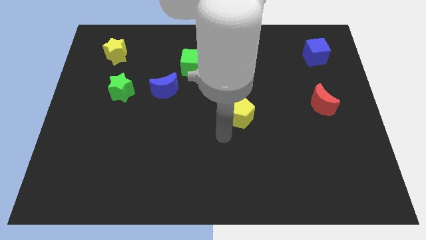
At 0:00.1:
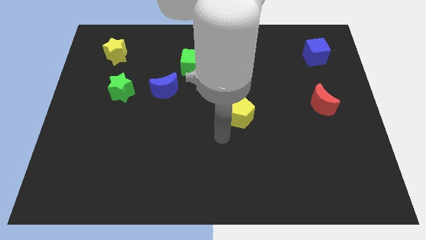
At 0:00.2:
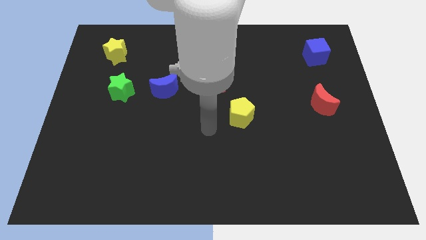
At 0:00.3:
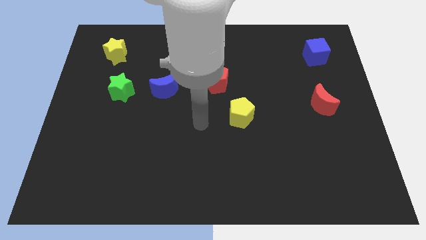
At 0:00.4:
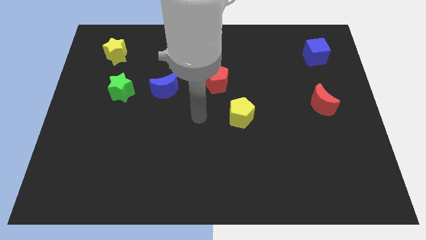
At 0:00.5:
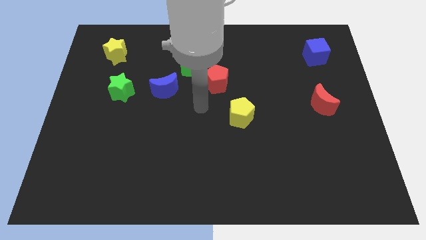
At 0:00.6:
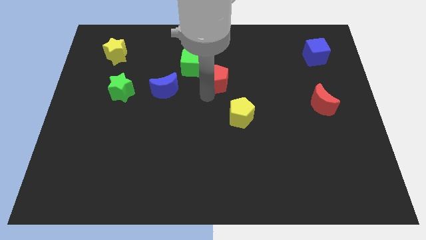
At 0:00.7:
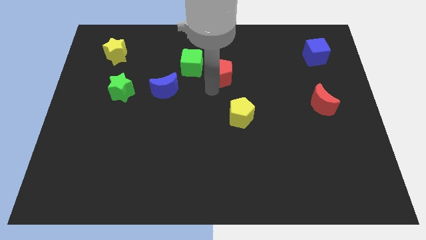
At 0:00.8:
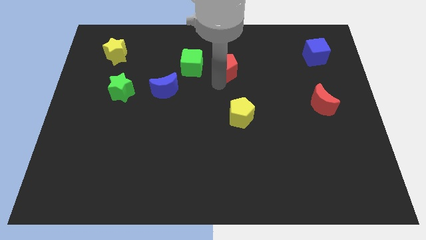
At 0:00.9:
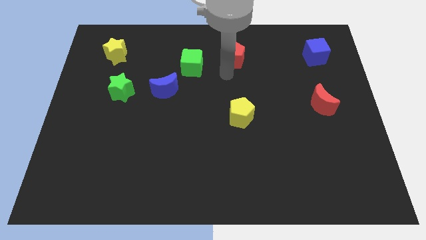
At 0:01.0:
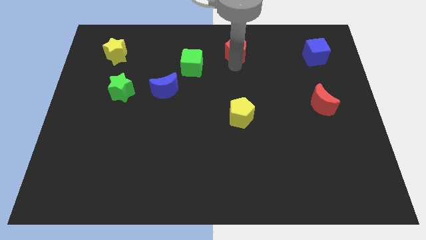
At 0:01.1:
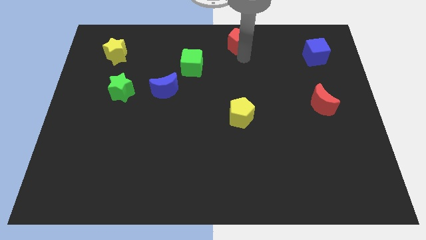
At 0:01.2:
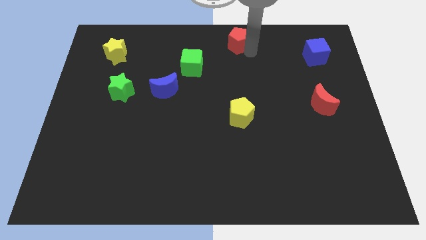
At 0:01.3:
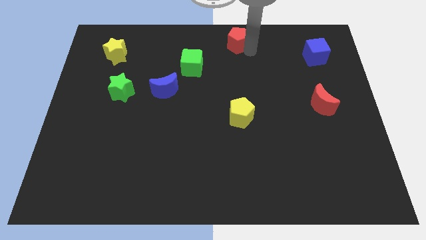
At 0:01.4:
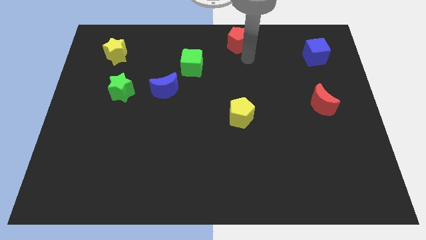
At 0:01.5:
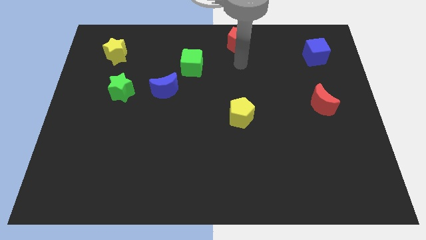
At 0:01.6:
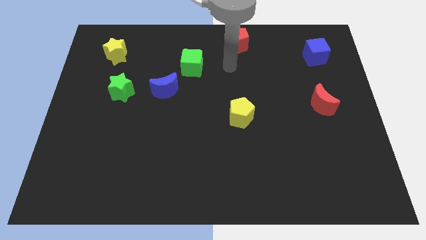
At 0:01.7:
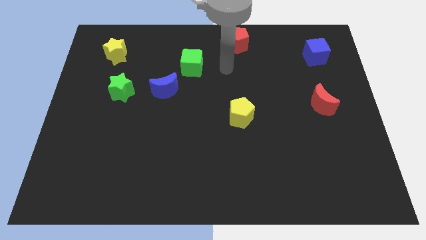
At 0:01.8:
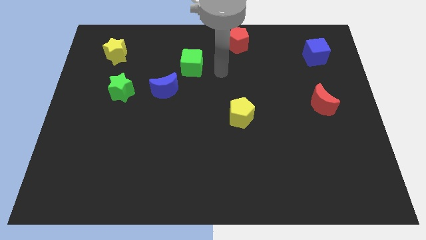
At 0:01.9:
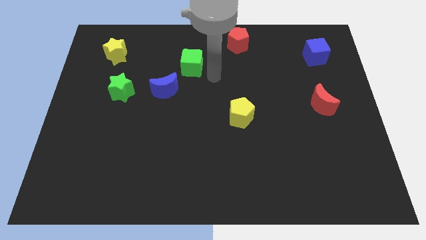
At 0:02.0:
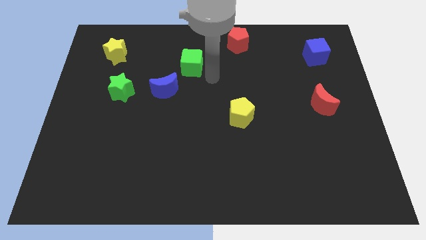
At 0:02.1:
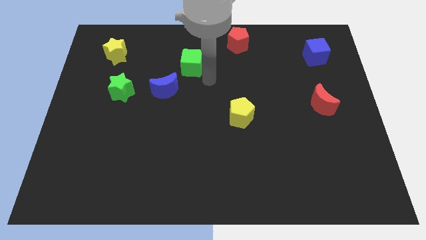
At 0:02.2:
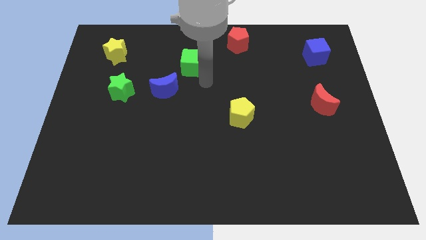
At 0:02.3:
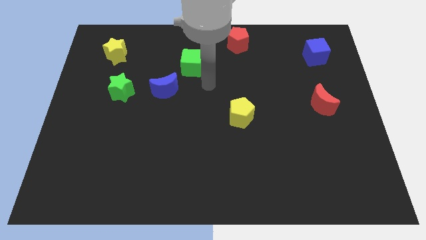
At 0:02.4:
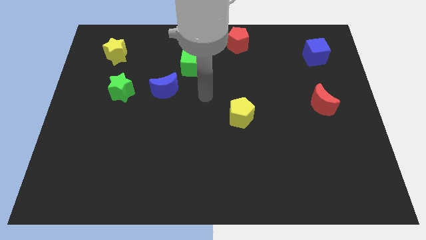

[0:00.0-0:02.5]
push the red pentagon at the top center of the board

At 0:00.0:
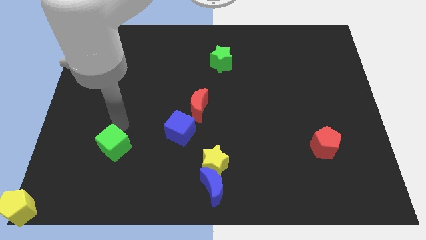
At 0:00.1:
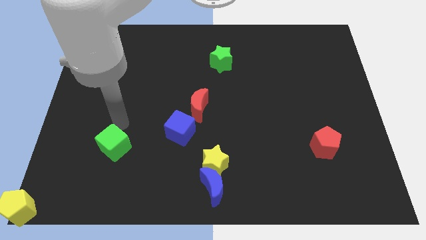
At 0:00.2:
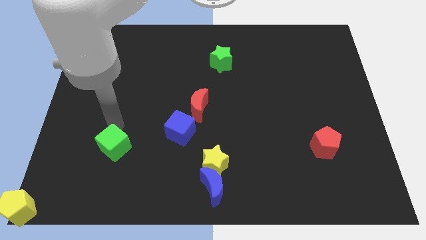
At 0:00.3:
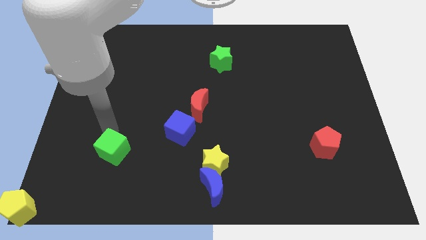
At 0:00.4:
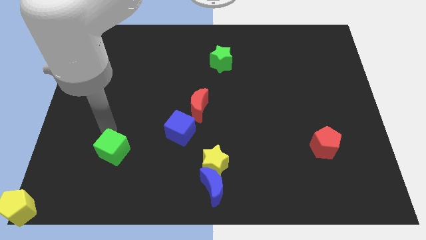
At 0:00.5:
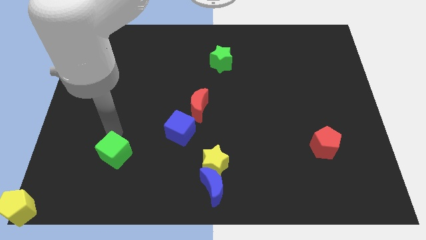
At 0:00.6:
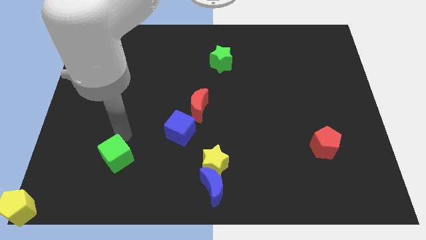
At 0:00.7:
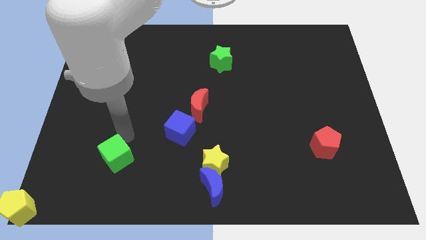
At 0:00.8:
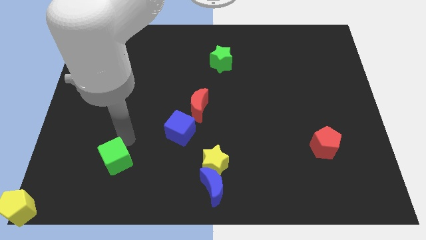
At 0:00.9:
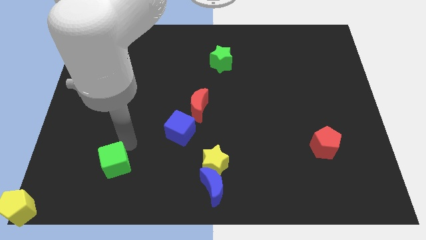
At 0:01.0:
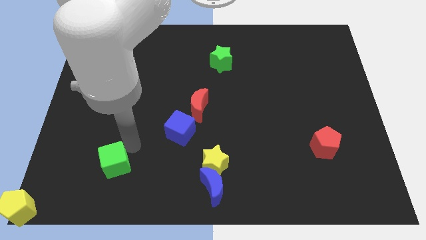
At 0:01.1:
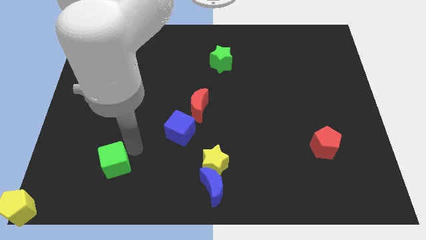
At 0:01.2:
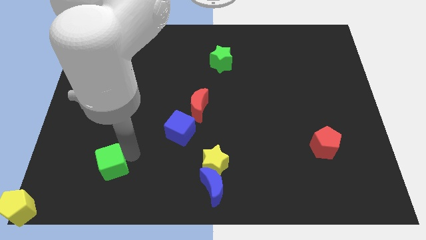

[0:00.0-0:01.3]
put green cube in between blue cube and yellow pentagon

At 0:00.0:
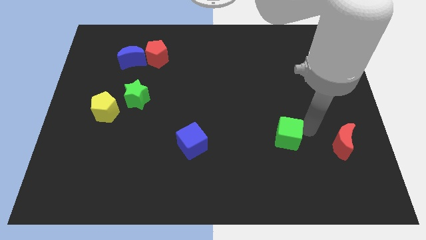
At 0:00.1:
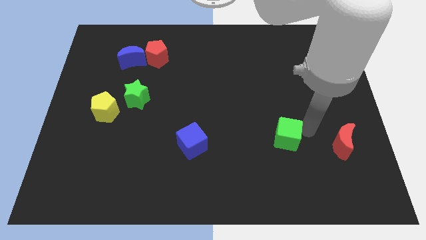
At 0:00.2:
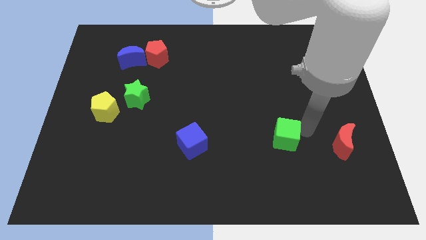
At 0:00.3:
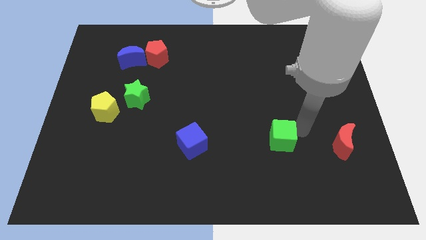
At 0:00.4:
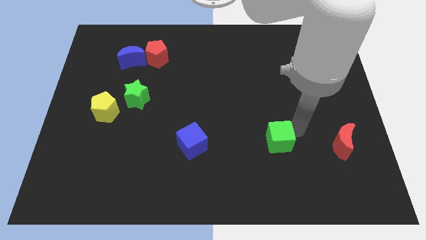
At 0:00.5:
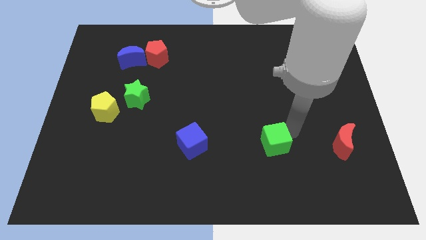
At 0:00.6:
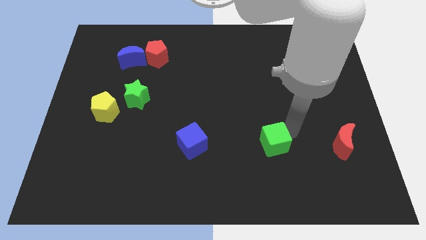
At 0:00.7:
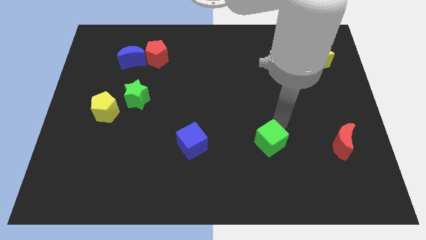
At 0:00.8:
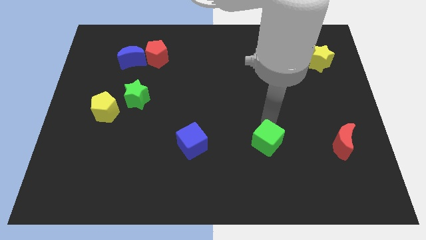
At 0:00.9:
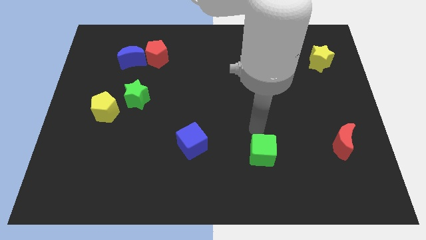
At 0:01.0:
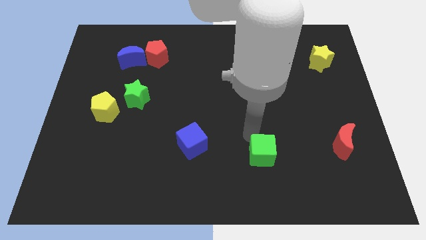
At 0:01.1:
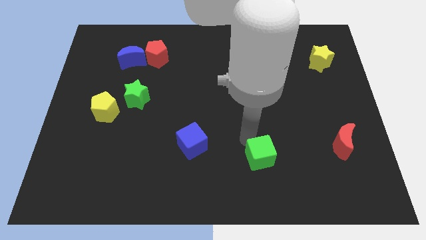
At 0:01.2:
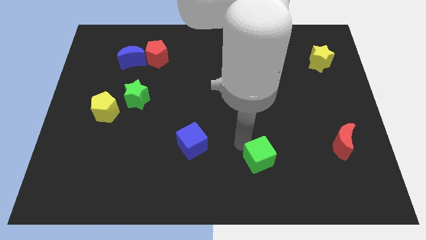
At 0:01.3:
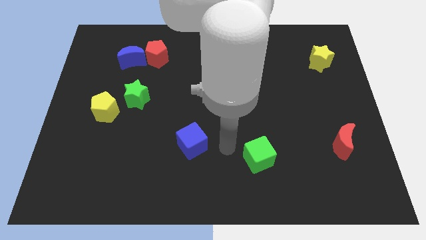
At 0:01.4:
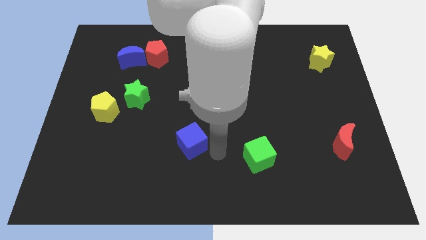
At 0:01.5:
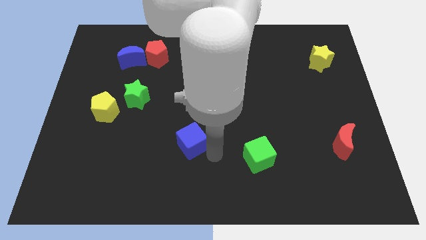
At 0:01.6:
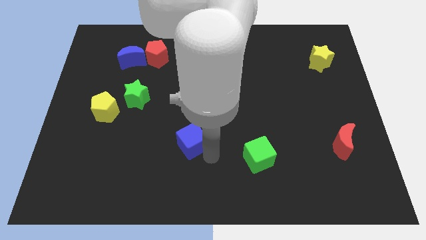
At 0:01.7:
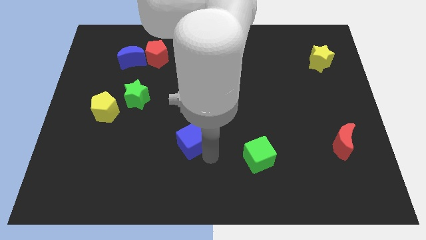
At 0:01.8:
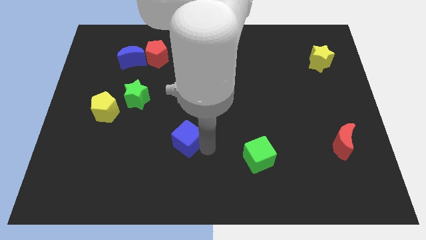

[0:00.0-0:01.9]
move the green cube towards the blue cube

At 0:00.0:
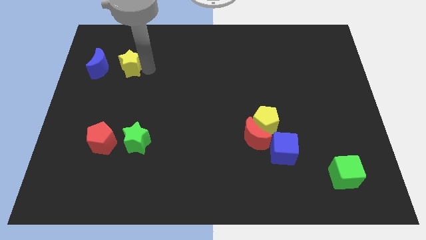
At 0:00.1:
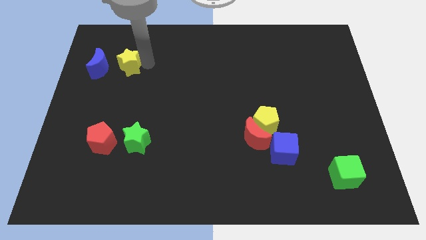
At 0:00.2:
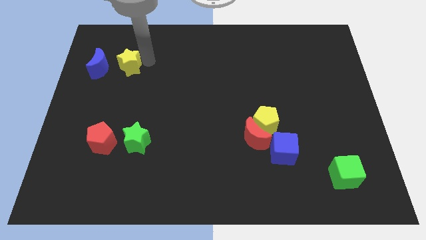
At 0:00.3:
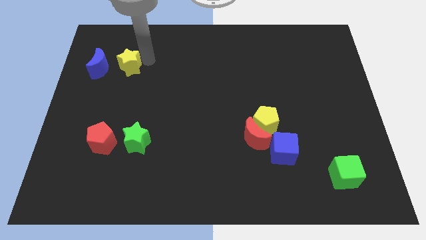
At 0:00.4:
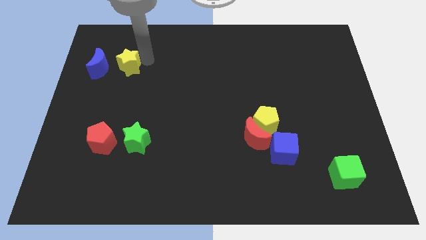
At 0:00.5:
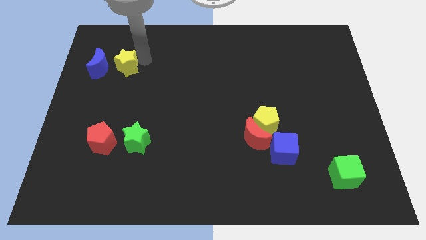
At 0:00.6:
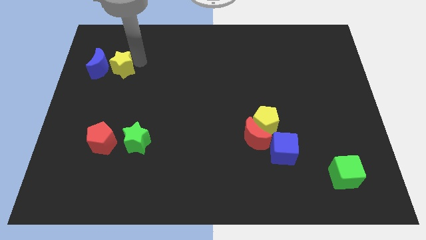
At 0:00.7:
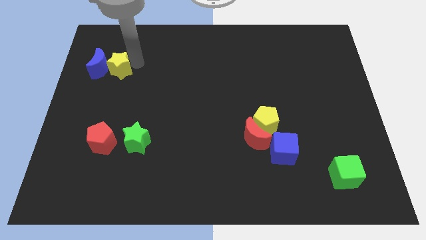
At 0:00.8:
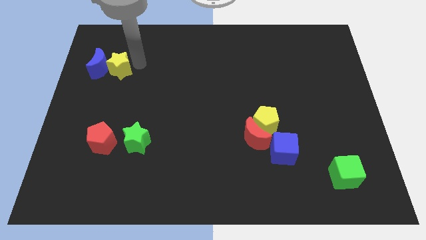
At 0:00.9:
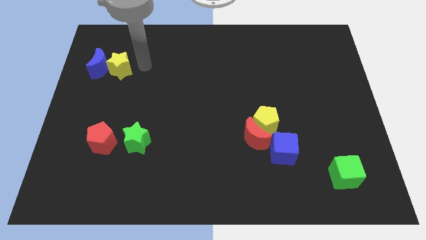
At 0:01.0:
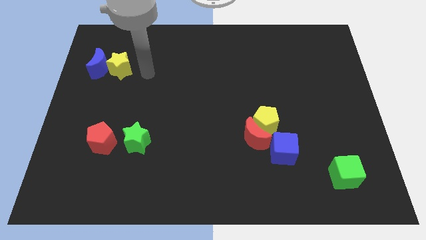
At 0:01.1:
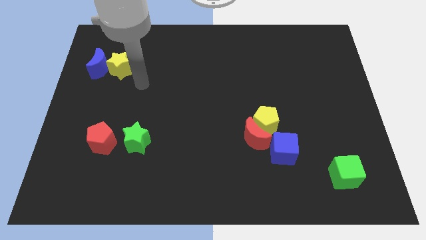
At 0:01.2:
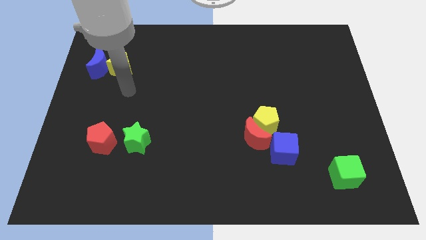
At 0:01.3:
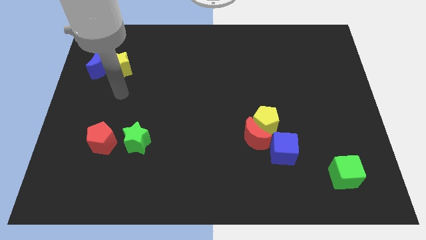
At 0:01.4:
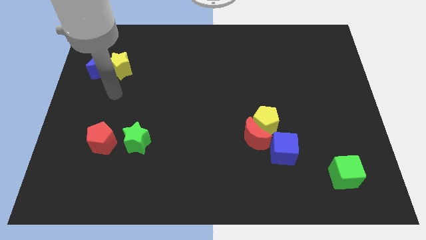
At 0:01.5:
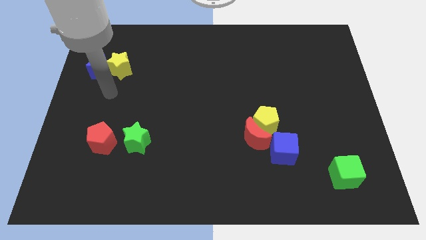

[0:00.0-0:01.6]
place the yellow star to the right side of the blue moon

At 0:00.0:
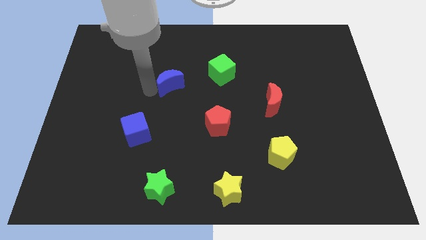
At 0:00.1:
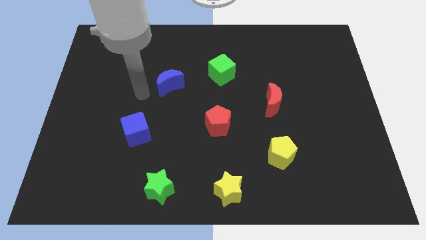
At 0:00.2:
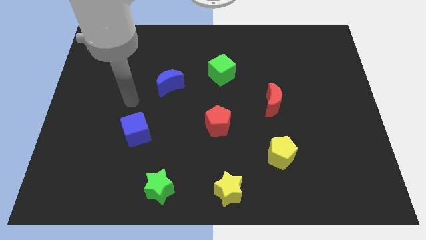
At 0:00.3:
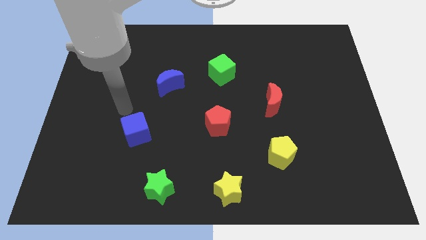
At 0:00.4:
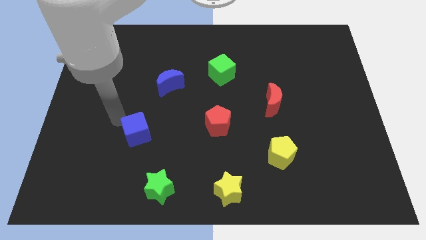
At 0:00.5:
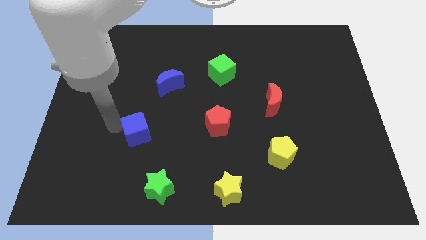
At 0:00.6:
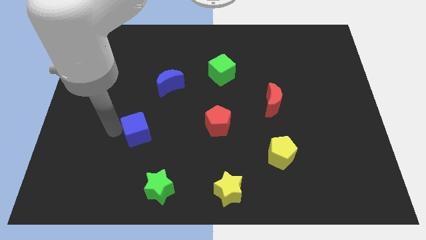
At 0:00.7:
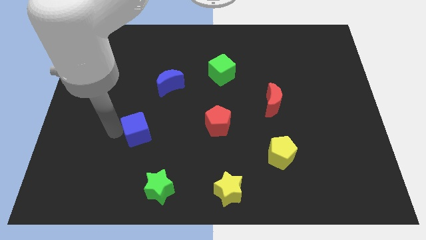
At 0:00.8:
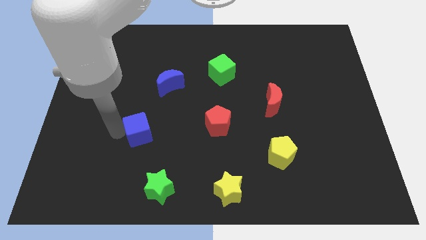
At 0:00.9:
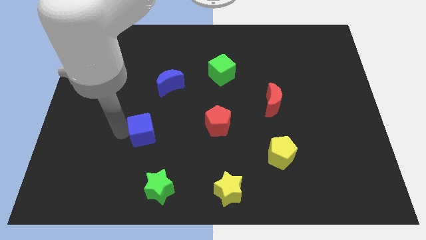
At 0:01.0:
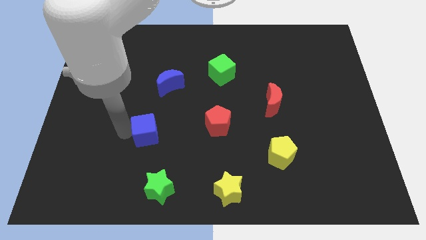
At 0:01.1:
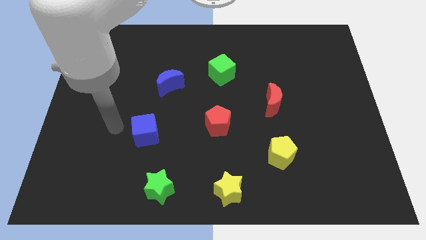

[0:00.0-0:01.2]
move the blue cube slightly to the right side of the board

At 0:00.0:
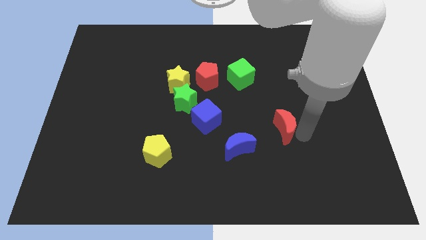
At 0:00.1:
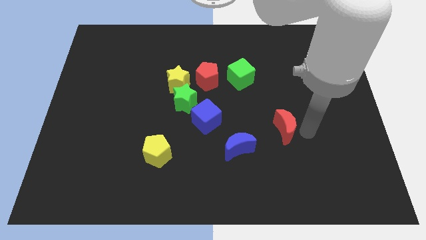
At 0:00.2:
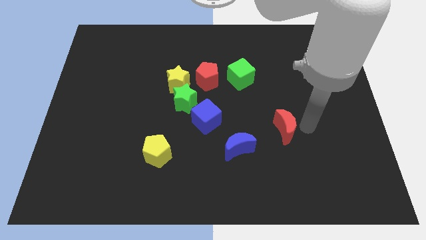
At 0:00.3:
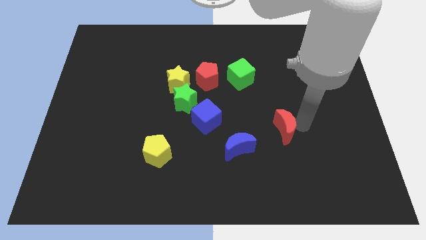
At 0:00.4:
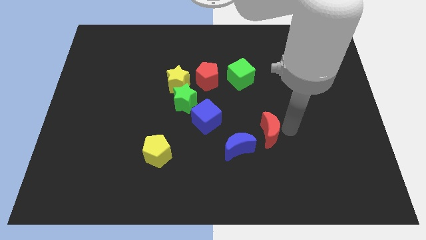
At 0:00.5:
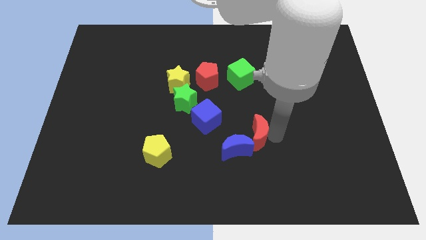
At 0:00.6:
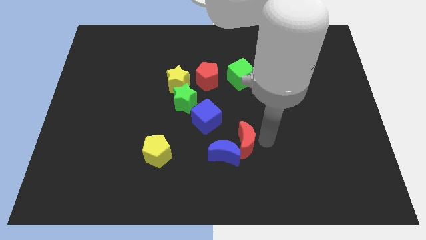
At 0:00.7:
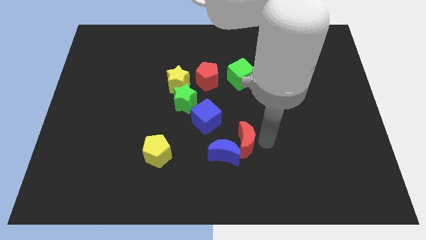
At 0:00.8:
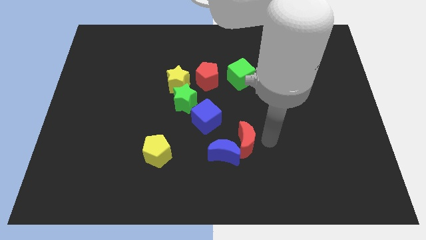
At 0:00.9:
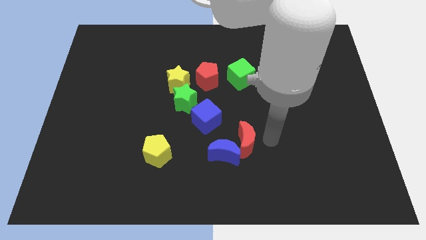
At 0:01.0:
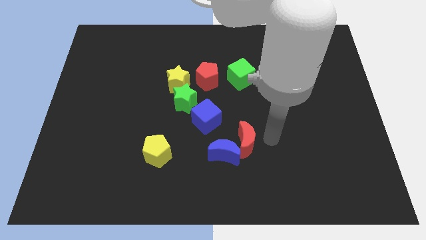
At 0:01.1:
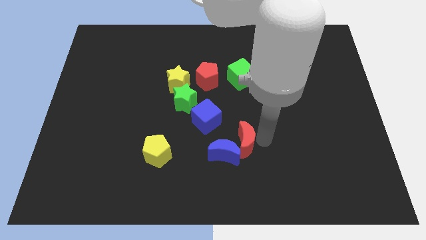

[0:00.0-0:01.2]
push the red moon into the blue moon
